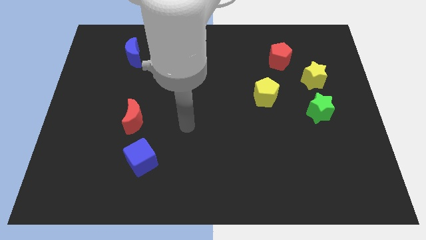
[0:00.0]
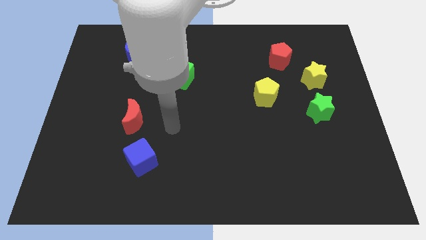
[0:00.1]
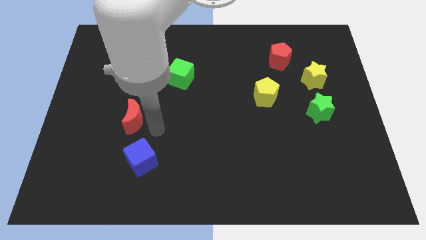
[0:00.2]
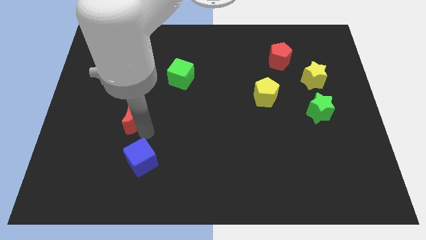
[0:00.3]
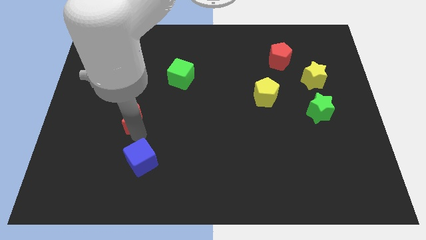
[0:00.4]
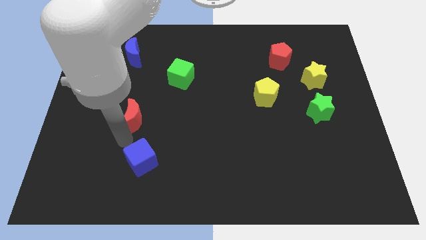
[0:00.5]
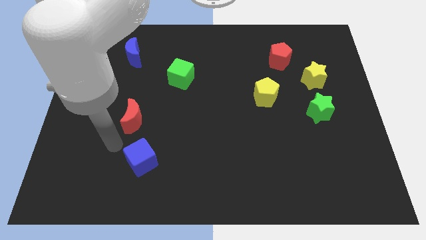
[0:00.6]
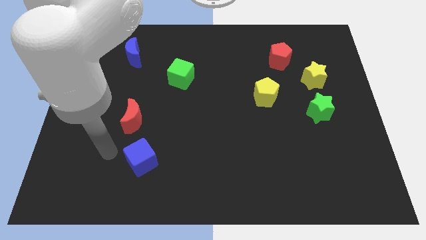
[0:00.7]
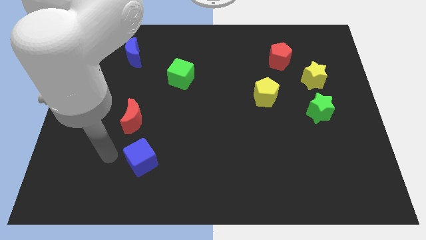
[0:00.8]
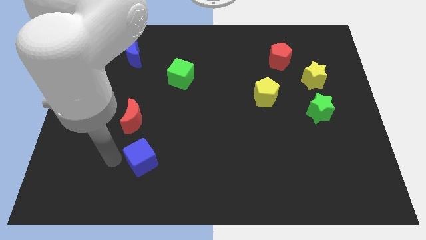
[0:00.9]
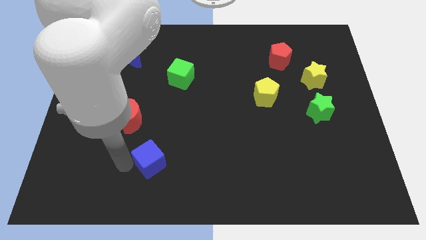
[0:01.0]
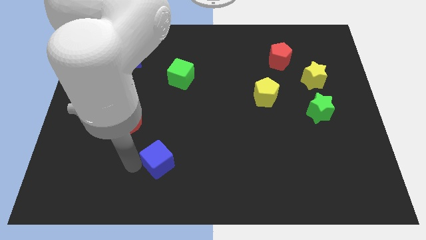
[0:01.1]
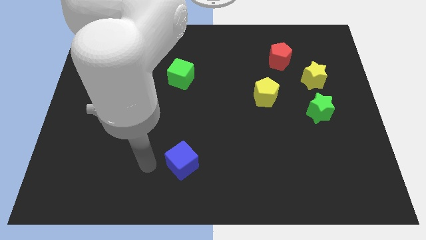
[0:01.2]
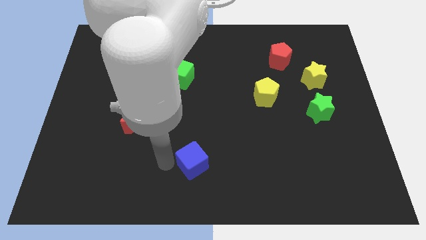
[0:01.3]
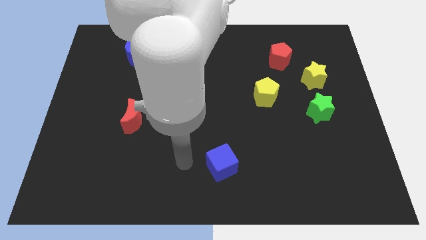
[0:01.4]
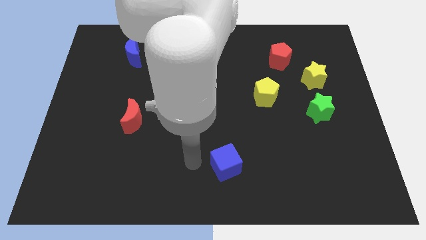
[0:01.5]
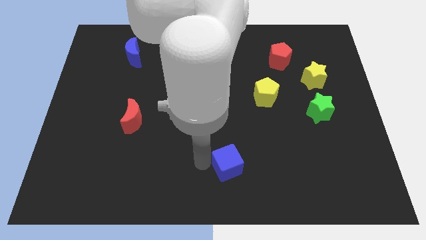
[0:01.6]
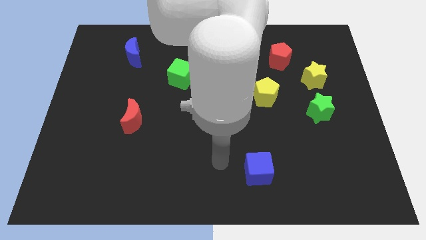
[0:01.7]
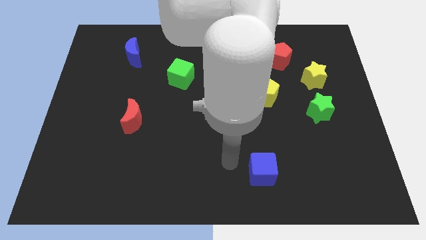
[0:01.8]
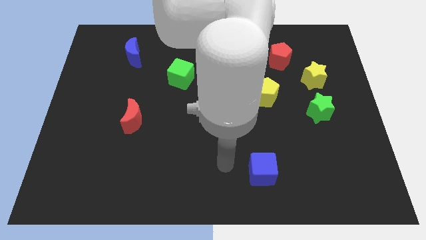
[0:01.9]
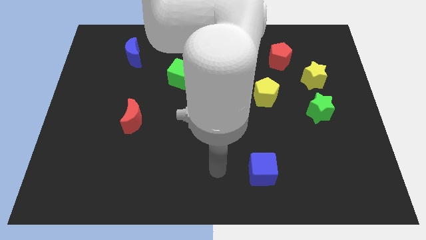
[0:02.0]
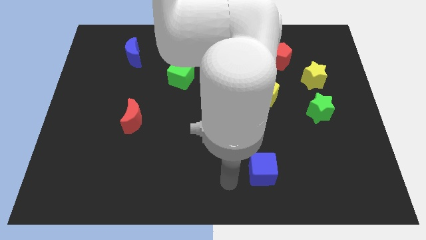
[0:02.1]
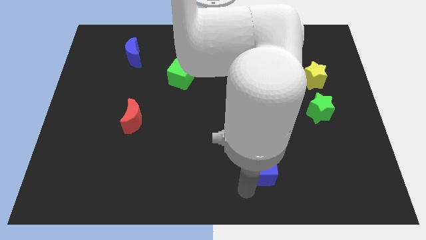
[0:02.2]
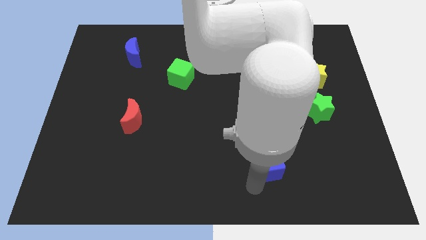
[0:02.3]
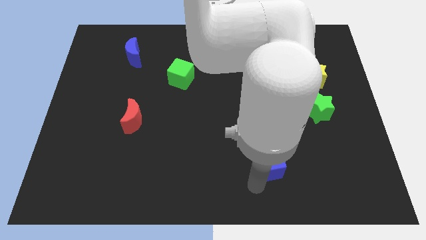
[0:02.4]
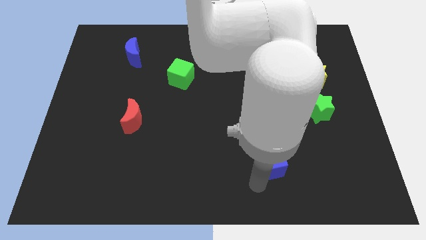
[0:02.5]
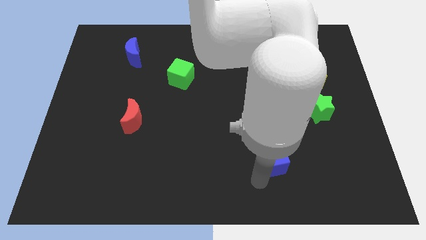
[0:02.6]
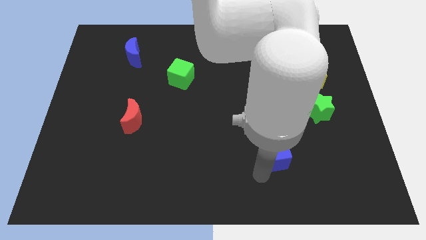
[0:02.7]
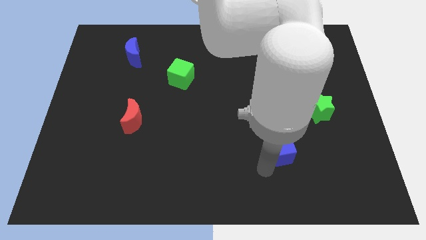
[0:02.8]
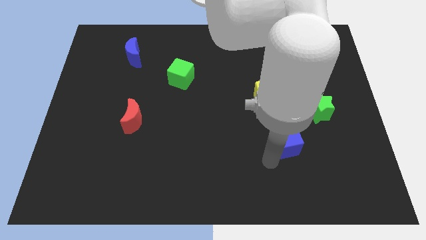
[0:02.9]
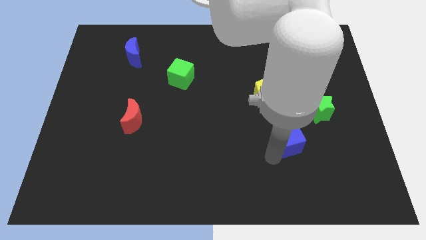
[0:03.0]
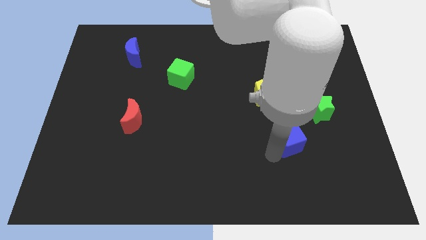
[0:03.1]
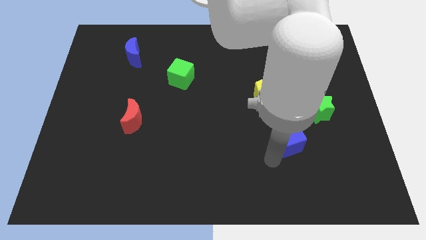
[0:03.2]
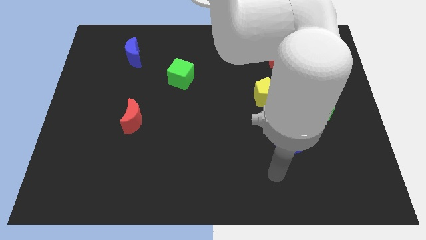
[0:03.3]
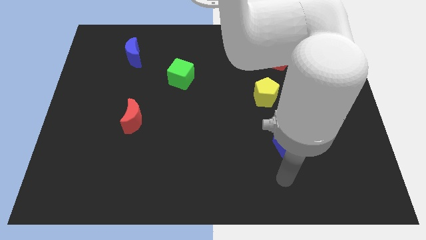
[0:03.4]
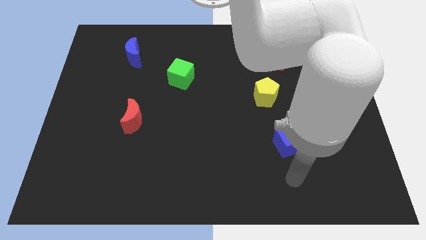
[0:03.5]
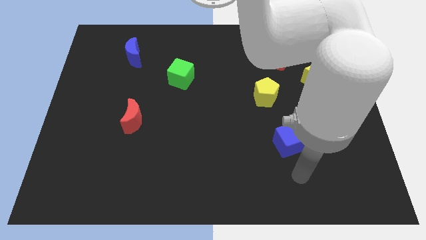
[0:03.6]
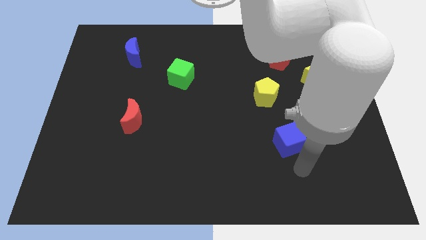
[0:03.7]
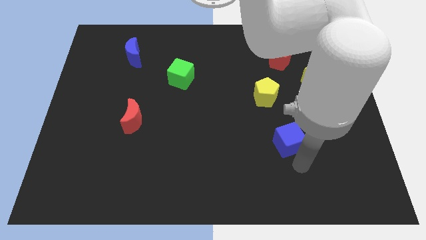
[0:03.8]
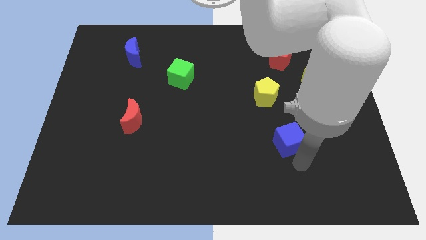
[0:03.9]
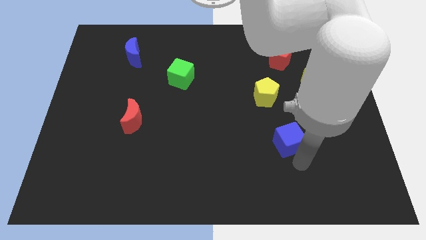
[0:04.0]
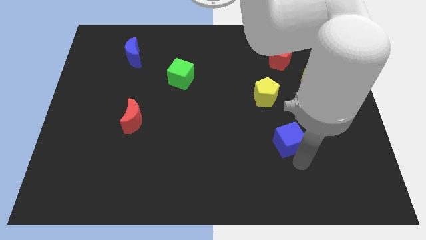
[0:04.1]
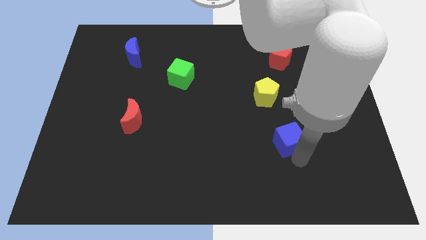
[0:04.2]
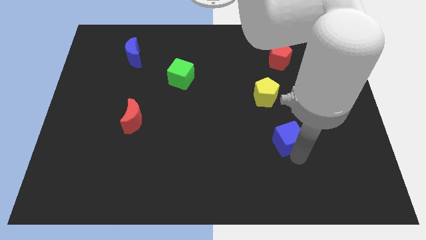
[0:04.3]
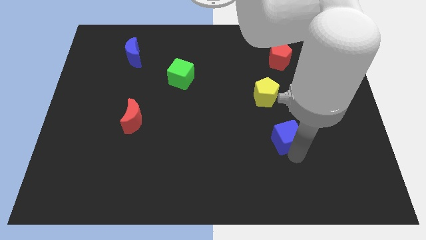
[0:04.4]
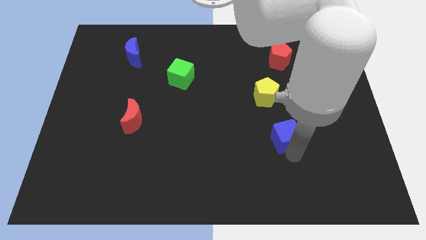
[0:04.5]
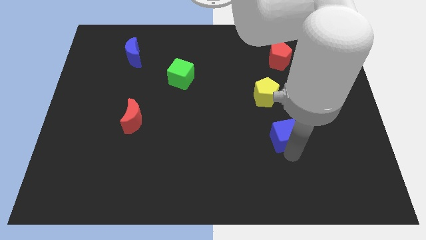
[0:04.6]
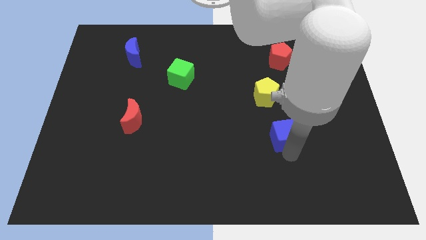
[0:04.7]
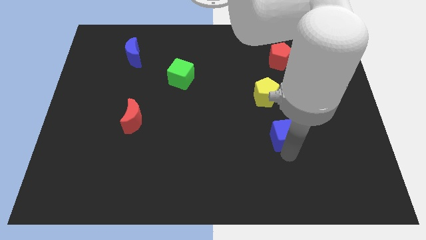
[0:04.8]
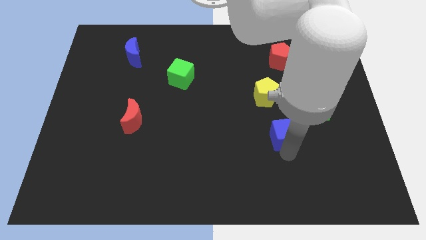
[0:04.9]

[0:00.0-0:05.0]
push the blue cube slightly to the right

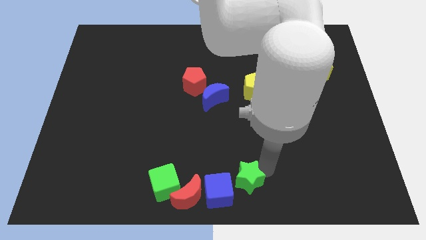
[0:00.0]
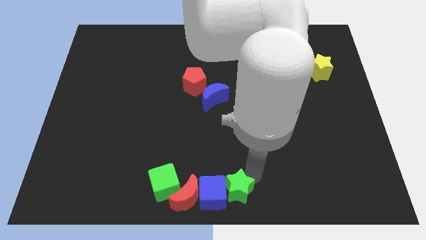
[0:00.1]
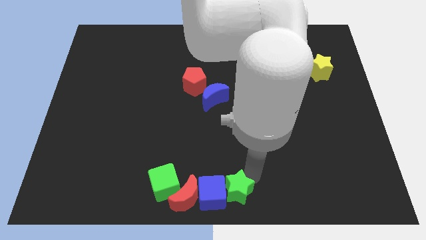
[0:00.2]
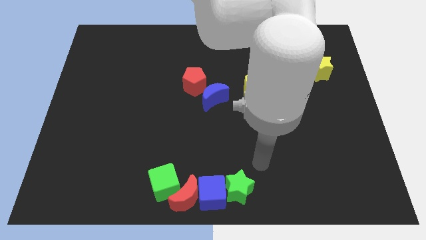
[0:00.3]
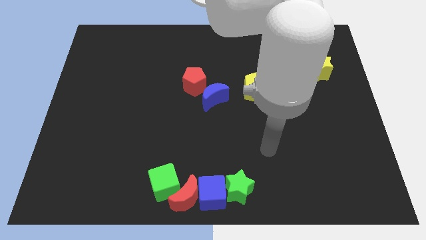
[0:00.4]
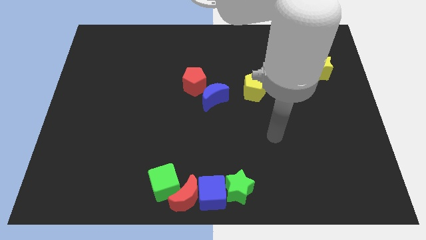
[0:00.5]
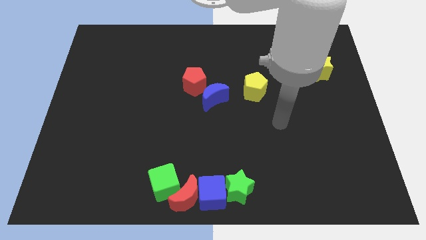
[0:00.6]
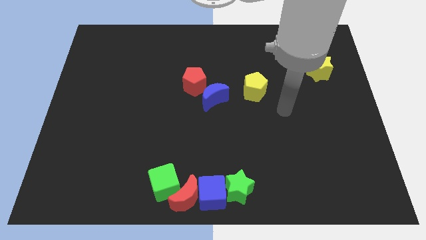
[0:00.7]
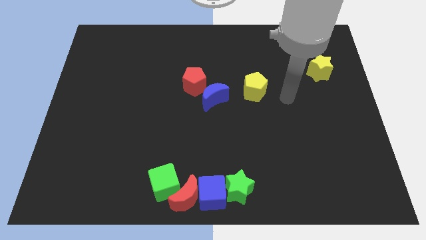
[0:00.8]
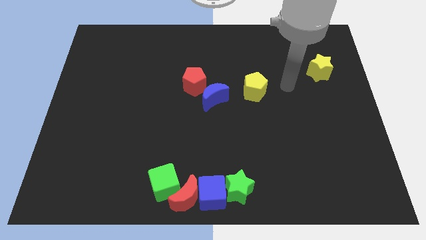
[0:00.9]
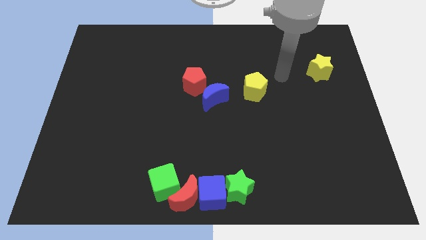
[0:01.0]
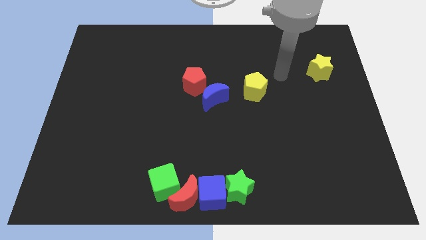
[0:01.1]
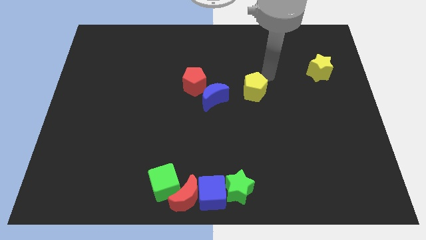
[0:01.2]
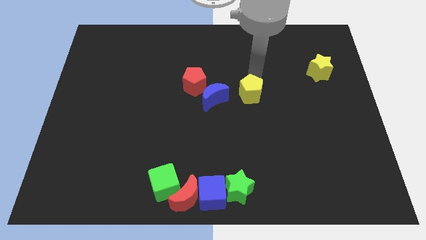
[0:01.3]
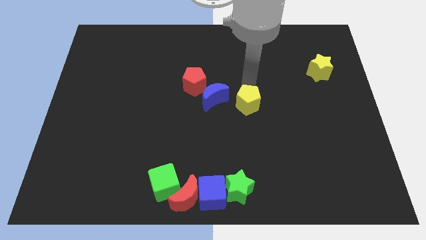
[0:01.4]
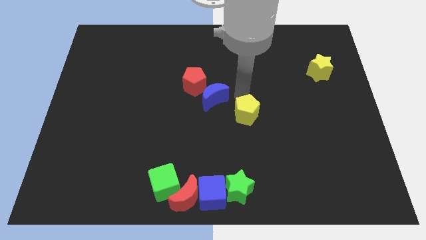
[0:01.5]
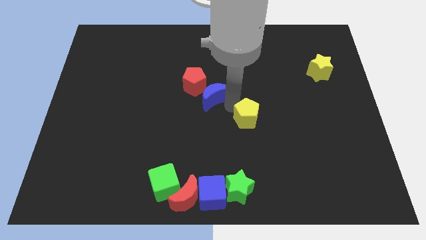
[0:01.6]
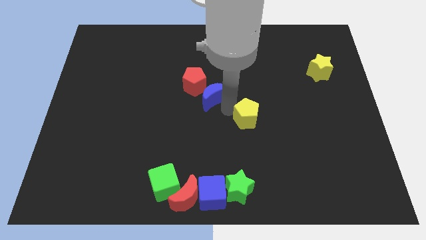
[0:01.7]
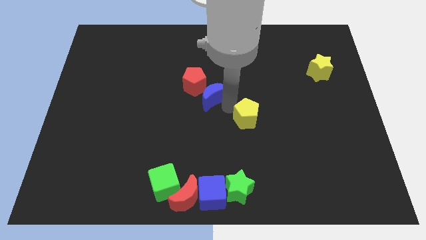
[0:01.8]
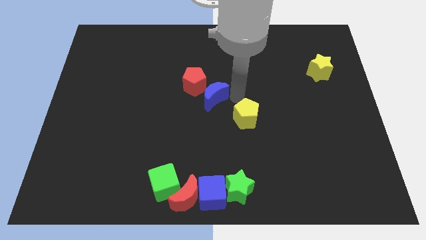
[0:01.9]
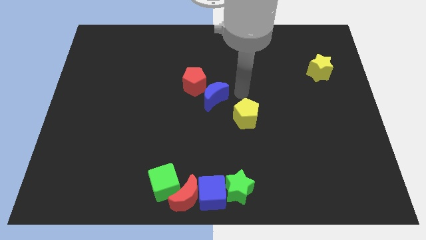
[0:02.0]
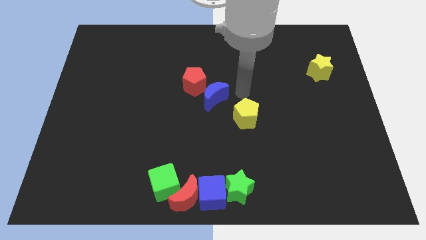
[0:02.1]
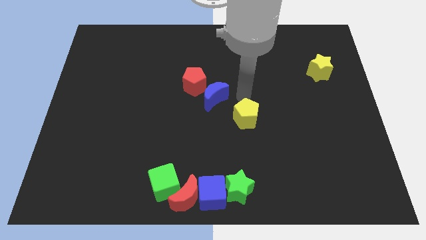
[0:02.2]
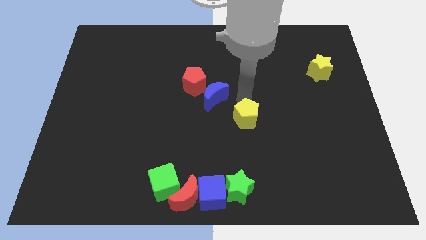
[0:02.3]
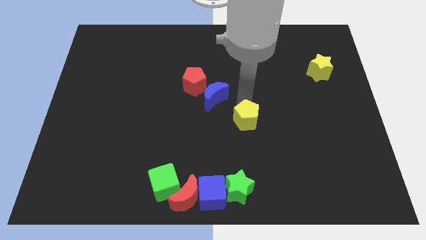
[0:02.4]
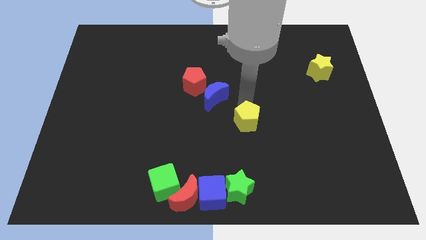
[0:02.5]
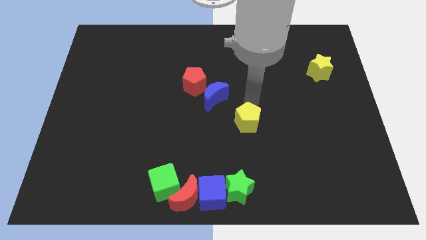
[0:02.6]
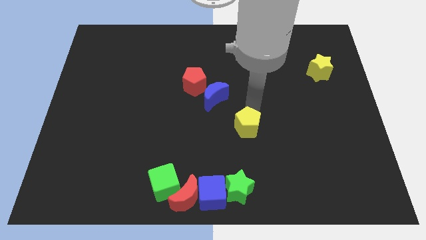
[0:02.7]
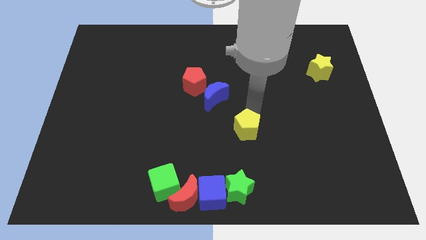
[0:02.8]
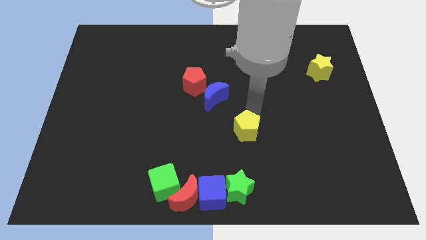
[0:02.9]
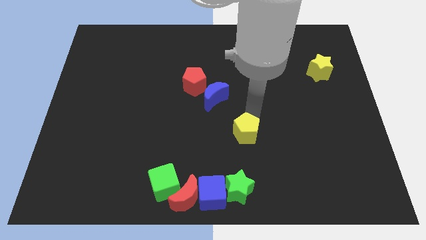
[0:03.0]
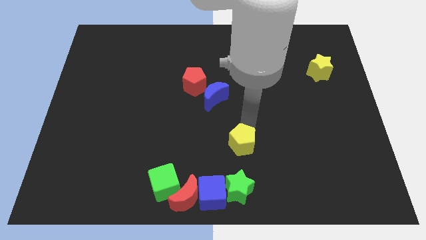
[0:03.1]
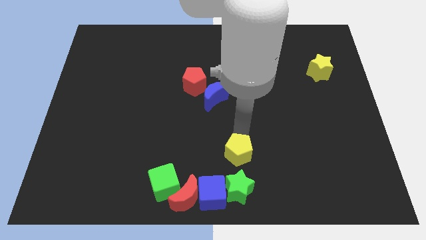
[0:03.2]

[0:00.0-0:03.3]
drag the yellow pentagon diagonally bottom right to the blue moon

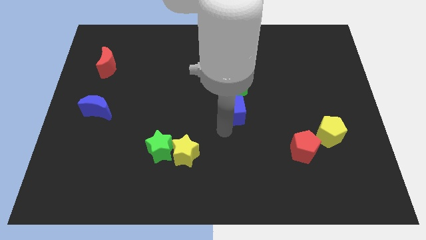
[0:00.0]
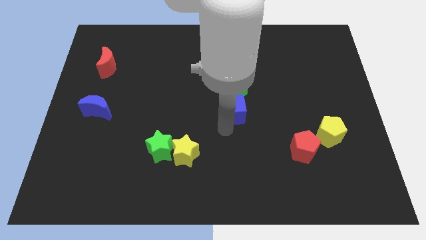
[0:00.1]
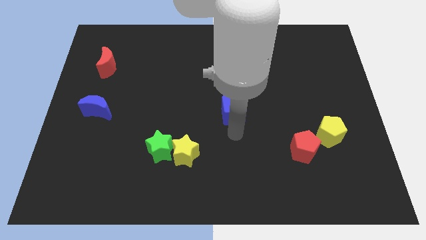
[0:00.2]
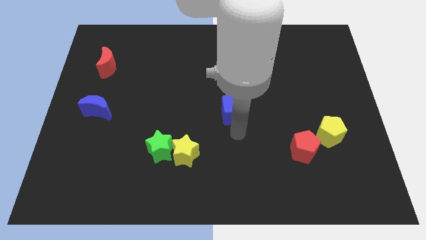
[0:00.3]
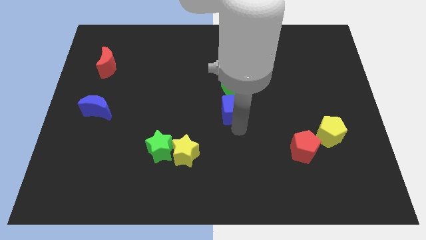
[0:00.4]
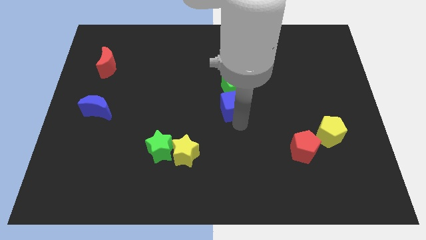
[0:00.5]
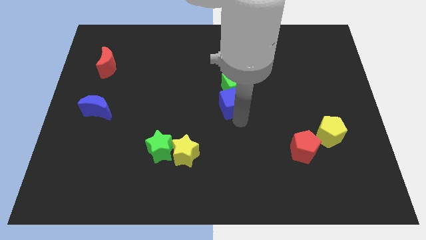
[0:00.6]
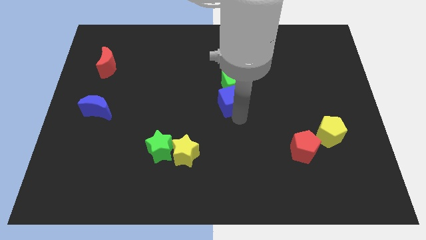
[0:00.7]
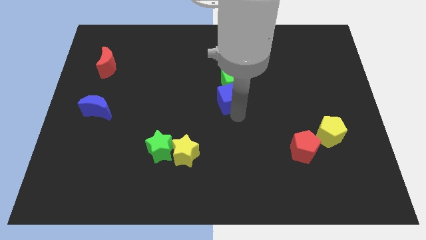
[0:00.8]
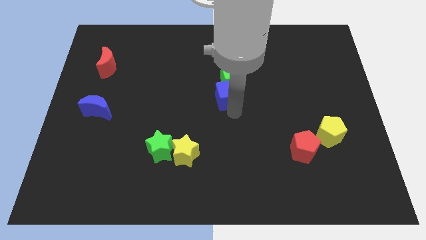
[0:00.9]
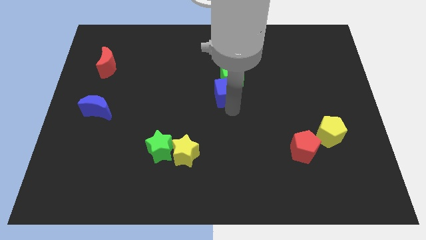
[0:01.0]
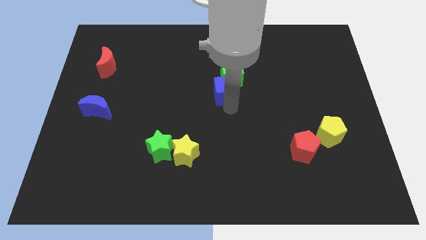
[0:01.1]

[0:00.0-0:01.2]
push blue cube in to green cube
